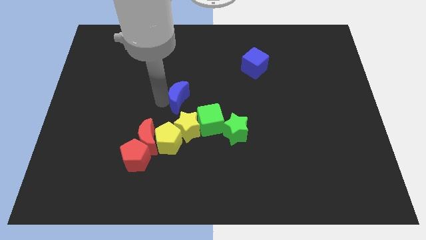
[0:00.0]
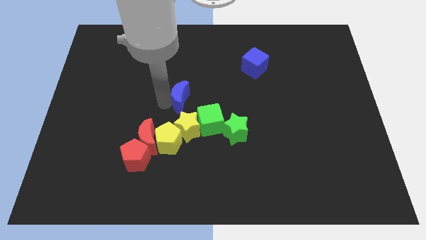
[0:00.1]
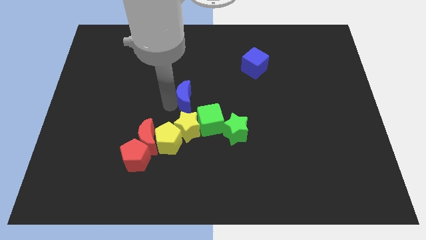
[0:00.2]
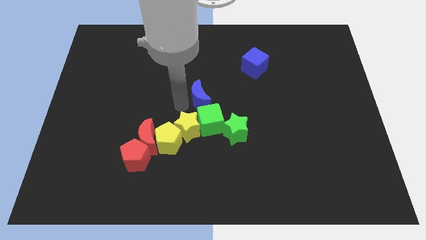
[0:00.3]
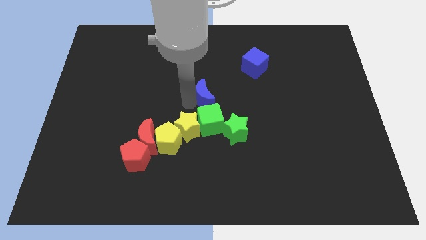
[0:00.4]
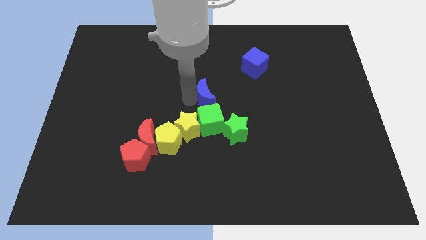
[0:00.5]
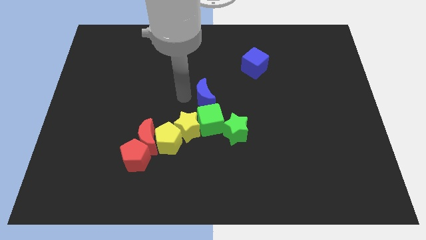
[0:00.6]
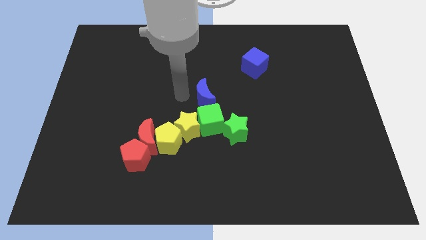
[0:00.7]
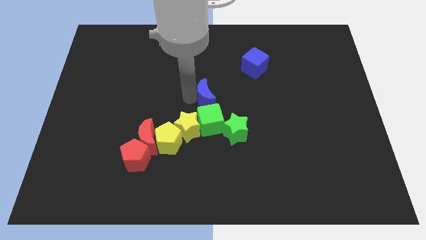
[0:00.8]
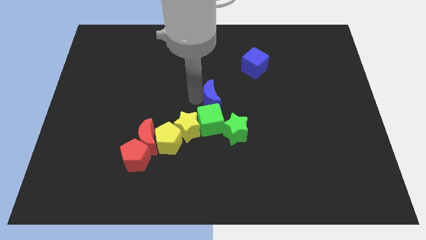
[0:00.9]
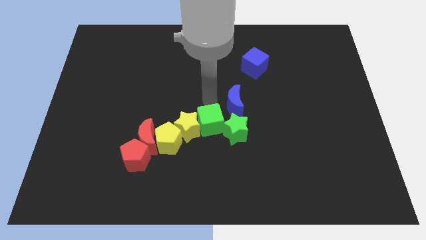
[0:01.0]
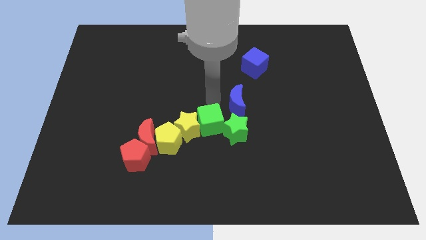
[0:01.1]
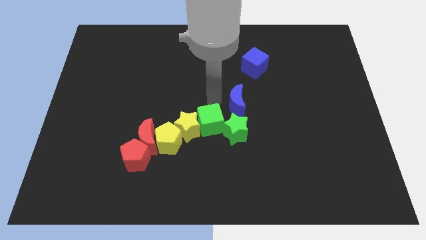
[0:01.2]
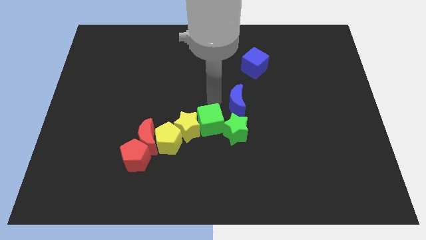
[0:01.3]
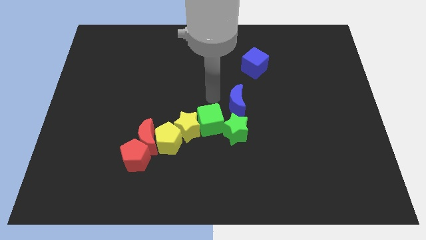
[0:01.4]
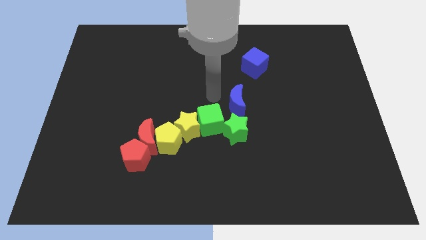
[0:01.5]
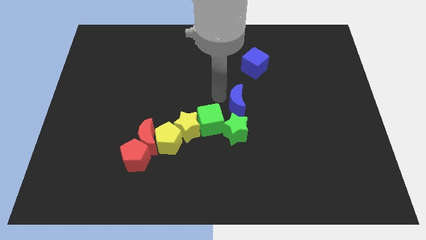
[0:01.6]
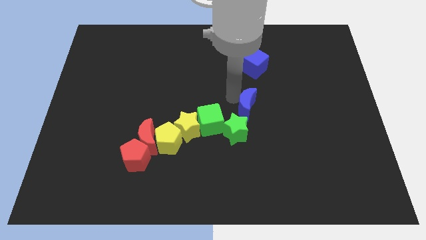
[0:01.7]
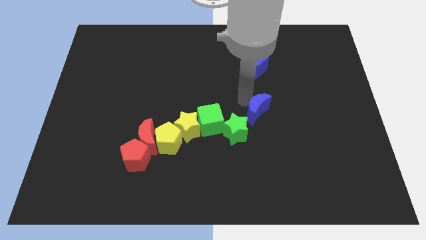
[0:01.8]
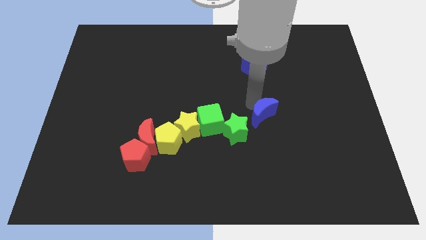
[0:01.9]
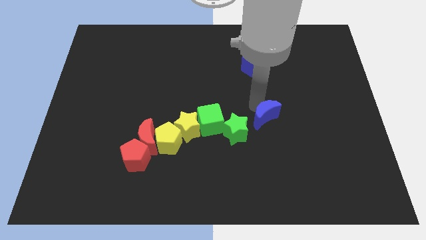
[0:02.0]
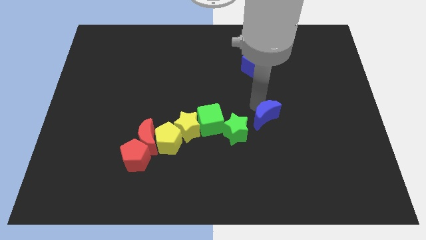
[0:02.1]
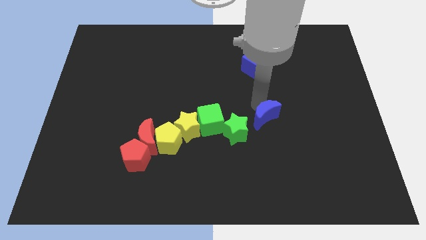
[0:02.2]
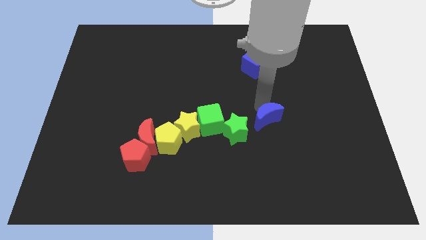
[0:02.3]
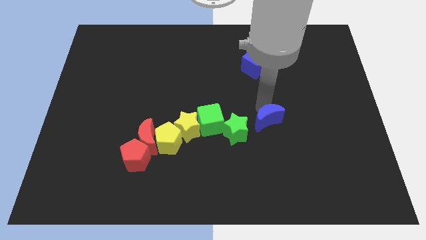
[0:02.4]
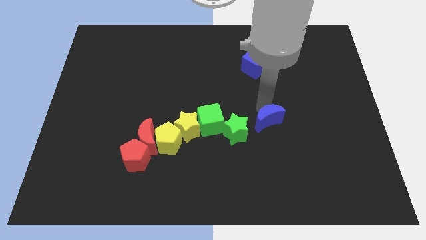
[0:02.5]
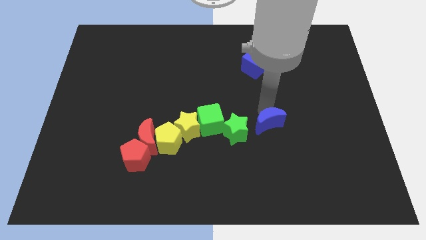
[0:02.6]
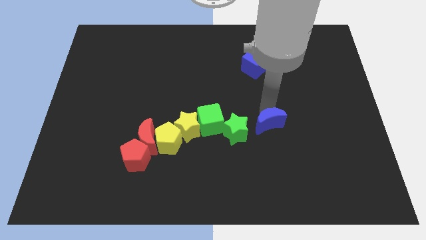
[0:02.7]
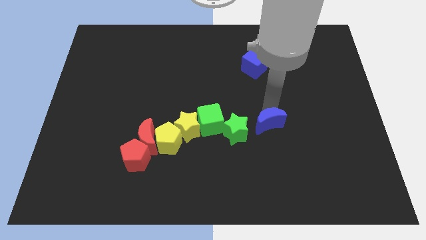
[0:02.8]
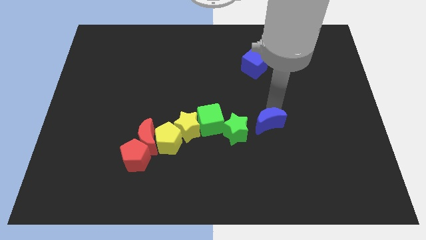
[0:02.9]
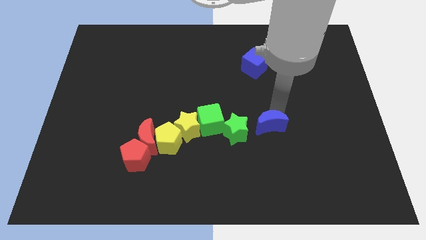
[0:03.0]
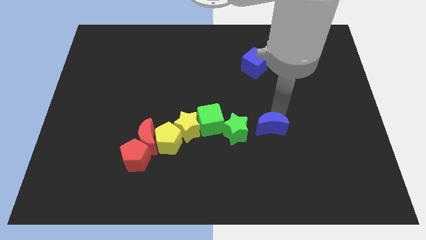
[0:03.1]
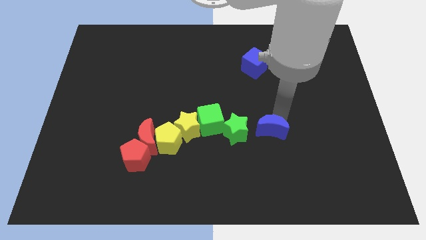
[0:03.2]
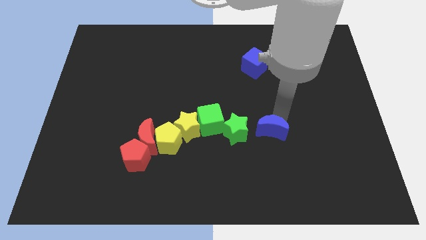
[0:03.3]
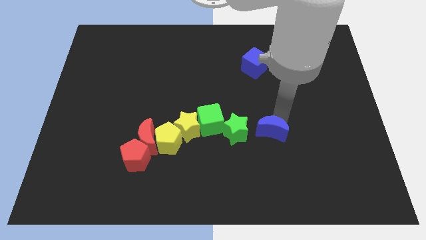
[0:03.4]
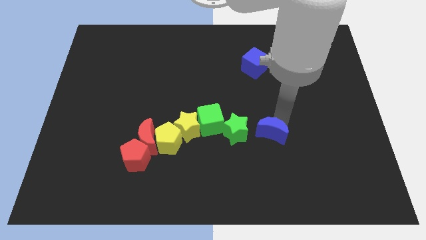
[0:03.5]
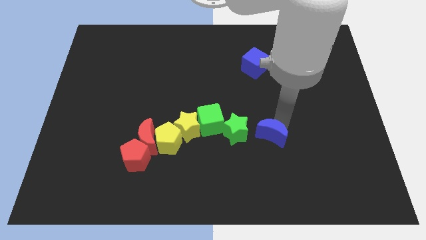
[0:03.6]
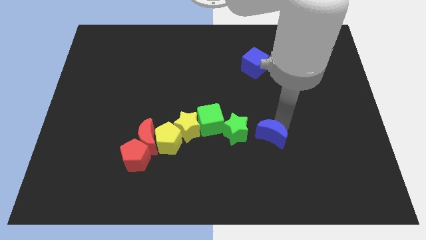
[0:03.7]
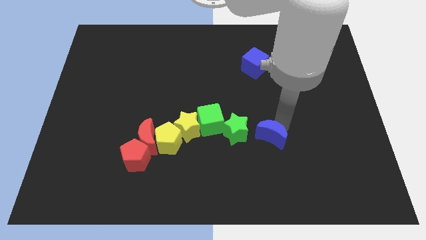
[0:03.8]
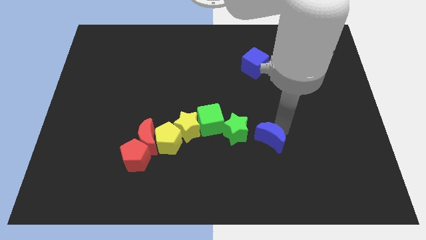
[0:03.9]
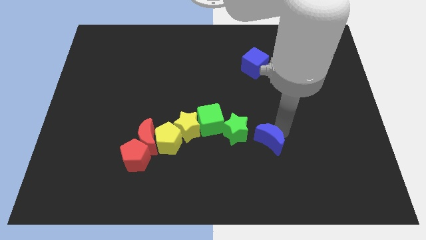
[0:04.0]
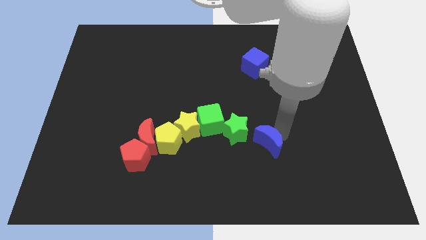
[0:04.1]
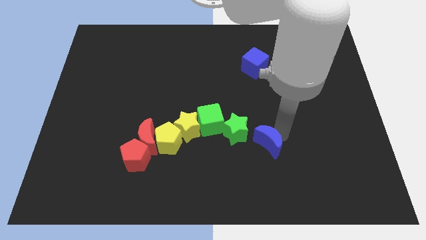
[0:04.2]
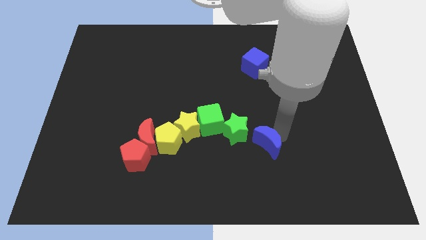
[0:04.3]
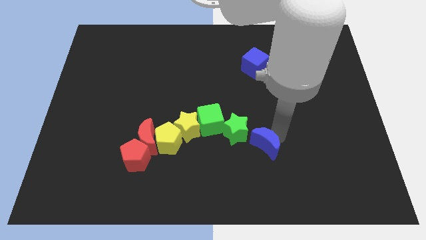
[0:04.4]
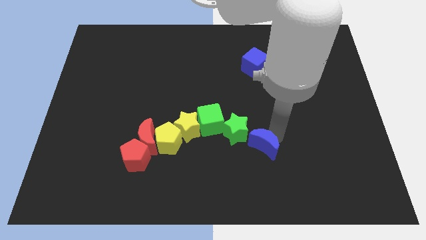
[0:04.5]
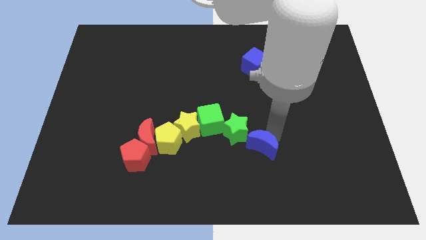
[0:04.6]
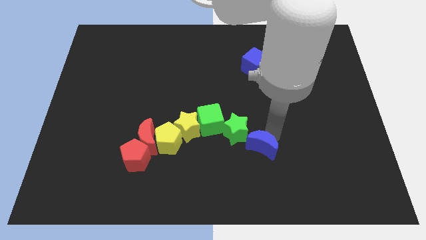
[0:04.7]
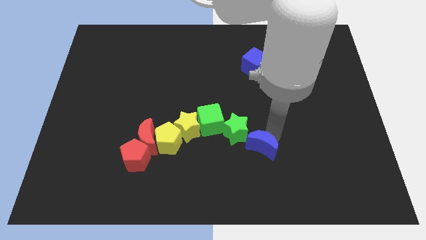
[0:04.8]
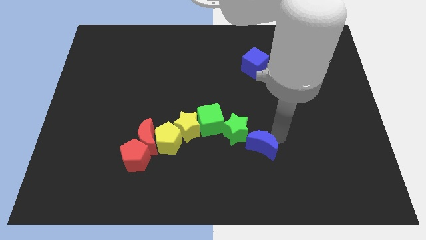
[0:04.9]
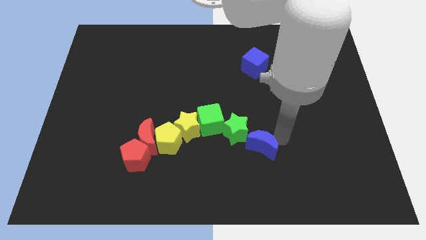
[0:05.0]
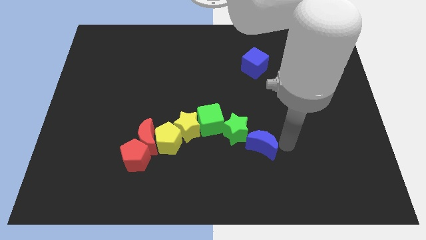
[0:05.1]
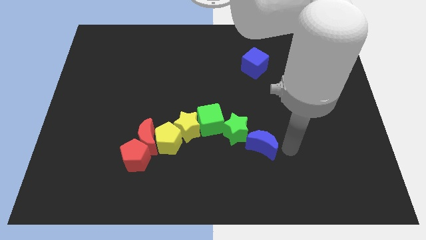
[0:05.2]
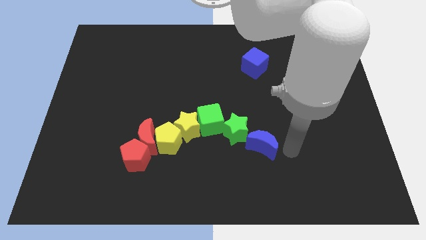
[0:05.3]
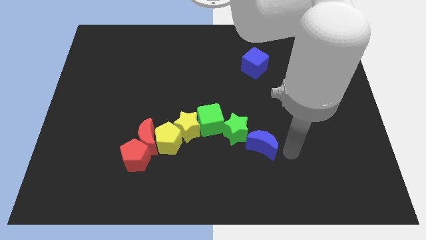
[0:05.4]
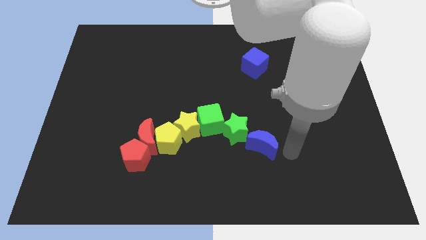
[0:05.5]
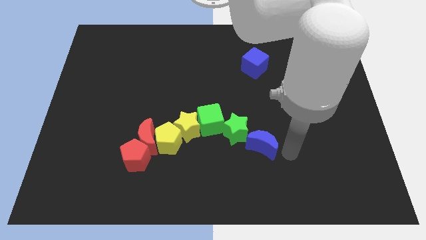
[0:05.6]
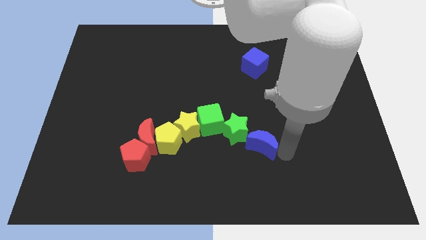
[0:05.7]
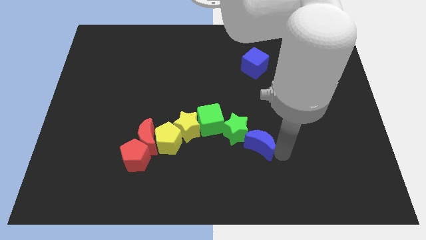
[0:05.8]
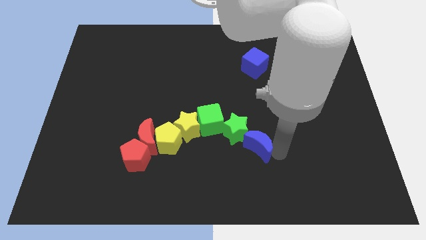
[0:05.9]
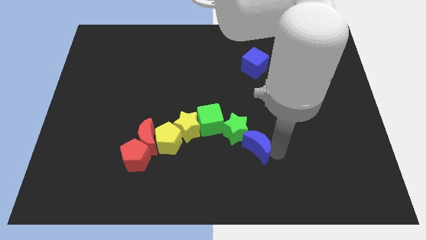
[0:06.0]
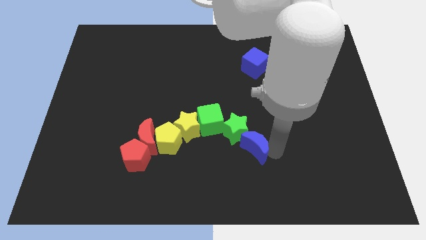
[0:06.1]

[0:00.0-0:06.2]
place the blue moon to the bottom right of the green star

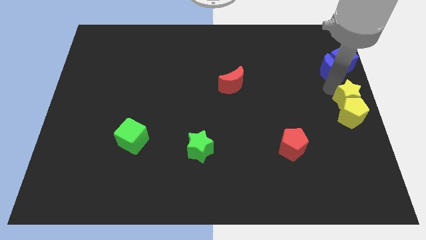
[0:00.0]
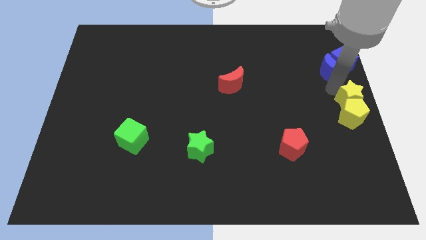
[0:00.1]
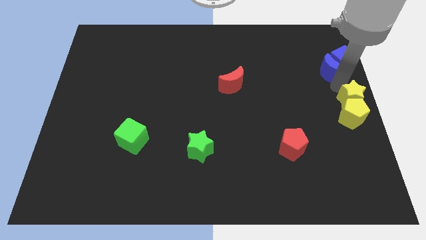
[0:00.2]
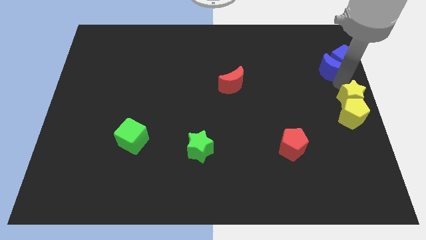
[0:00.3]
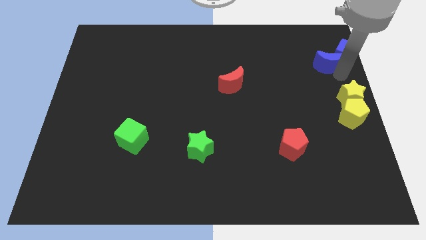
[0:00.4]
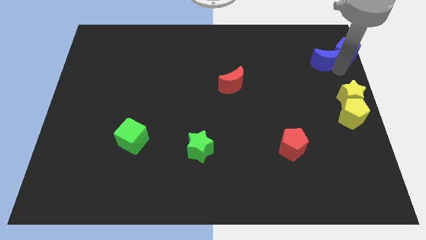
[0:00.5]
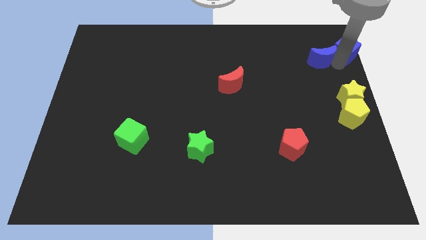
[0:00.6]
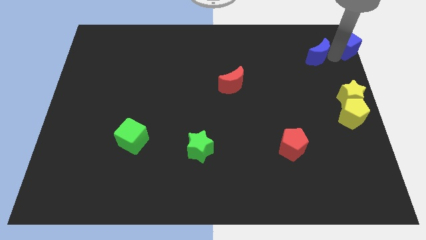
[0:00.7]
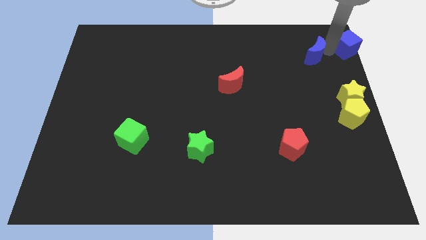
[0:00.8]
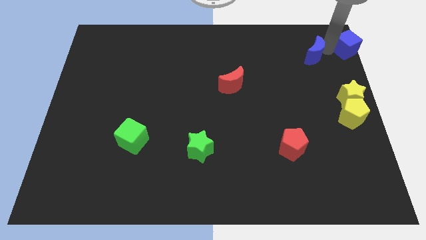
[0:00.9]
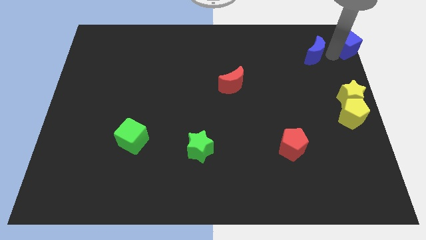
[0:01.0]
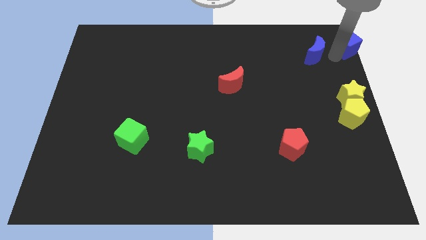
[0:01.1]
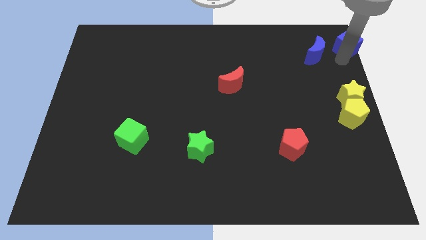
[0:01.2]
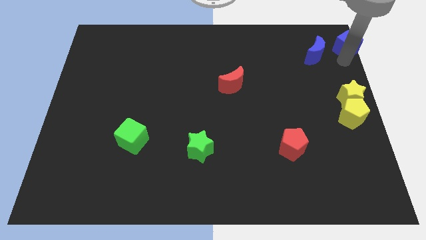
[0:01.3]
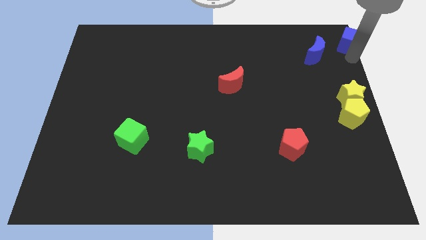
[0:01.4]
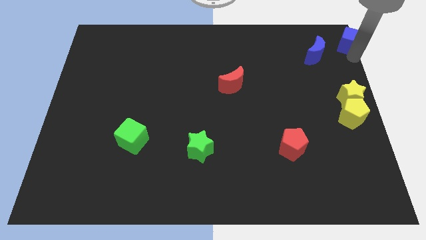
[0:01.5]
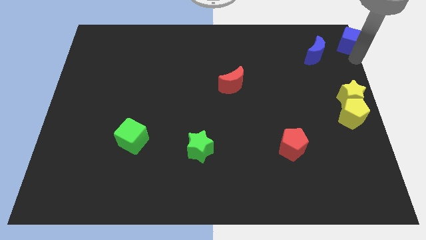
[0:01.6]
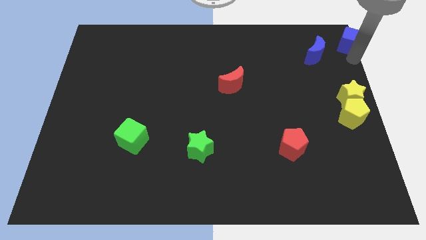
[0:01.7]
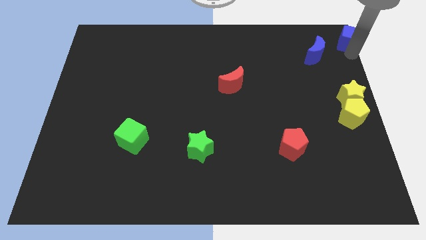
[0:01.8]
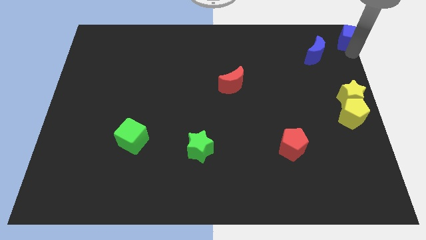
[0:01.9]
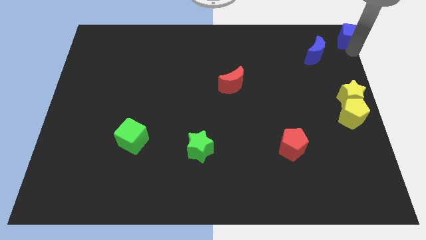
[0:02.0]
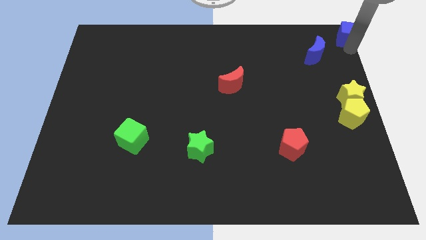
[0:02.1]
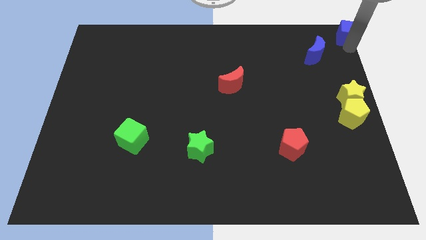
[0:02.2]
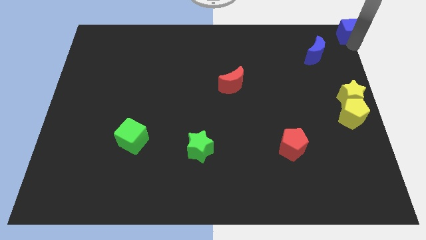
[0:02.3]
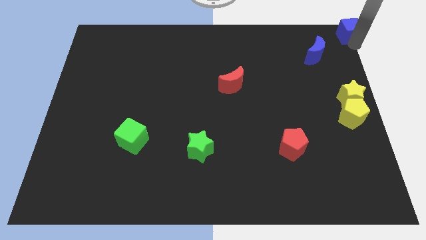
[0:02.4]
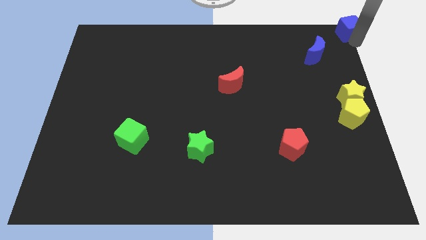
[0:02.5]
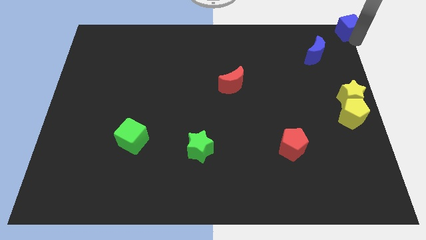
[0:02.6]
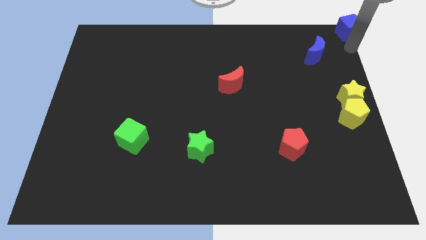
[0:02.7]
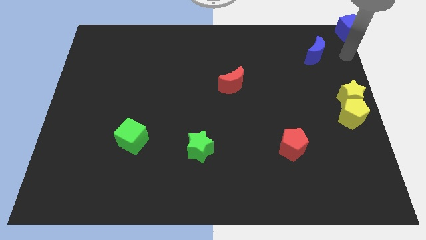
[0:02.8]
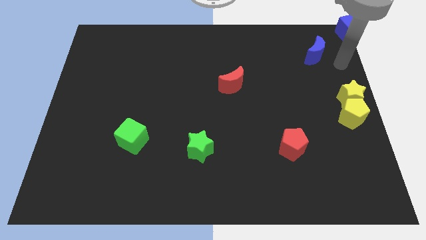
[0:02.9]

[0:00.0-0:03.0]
move the blue cube to the top right corner of the board
